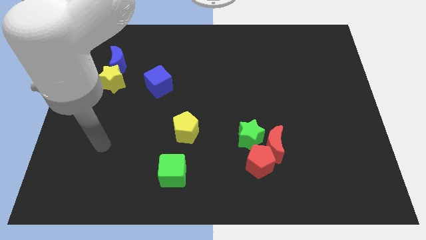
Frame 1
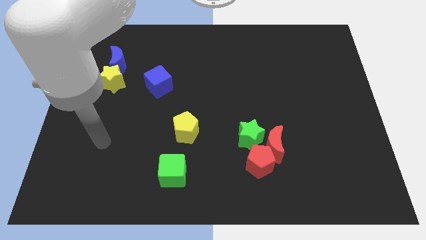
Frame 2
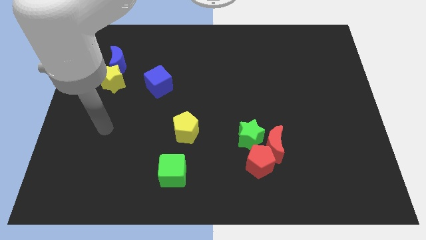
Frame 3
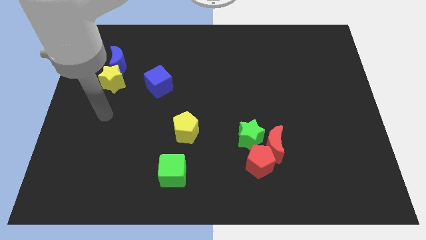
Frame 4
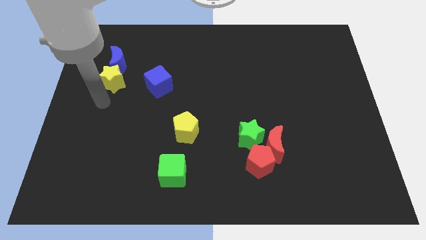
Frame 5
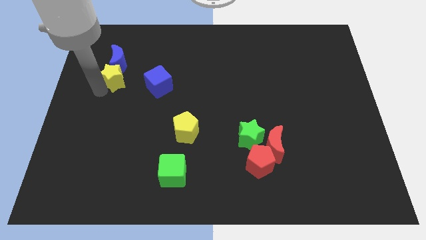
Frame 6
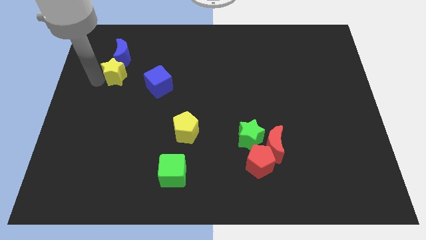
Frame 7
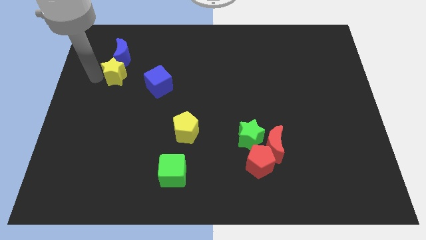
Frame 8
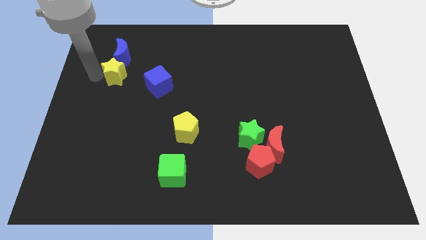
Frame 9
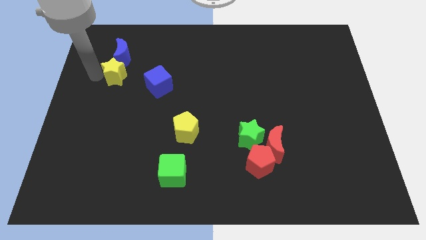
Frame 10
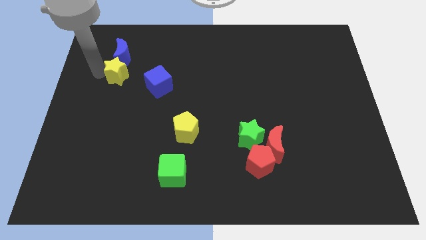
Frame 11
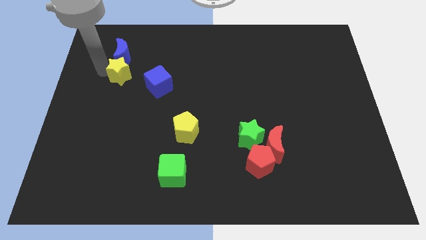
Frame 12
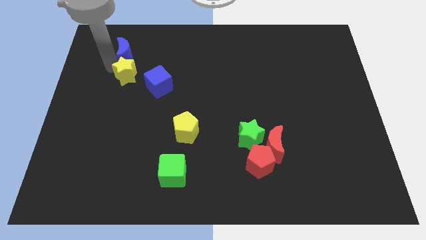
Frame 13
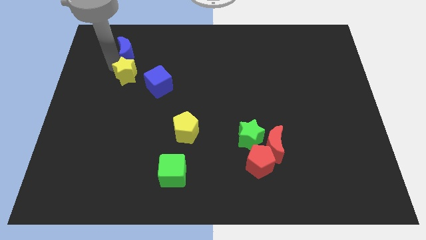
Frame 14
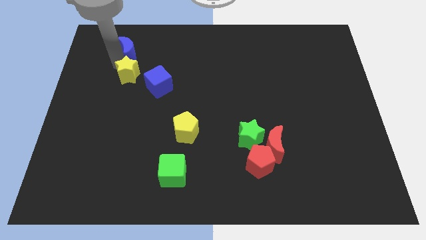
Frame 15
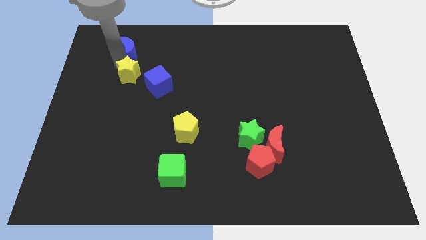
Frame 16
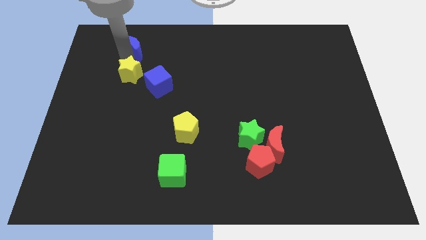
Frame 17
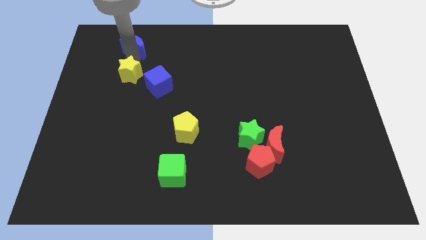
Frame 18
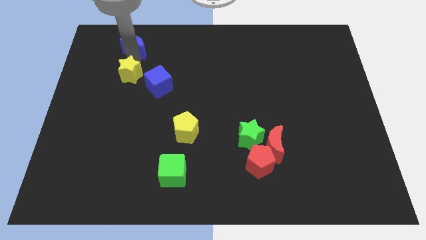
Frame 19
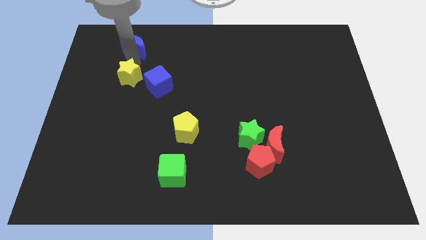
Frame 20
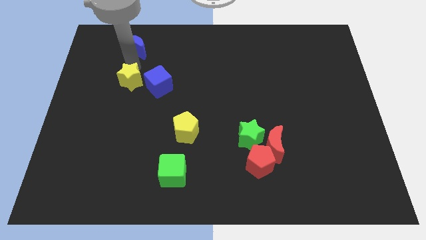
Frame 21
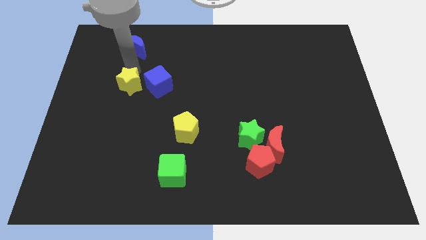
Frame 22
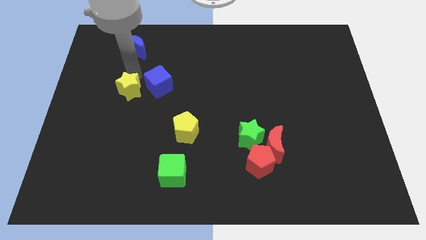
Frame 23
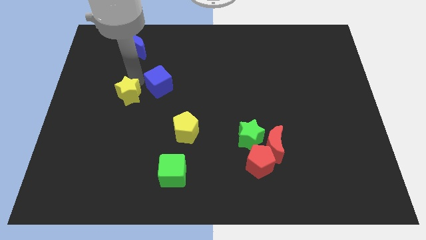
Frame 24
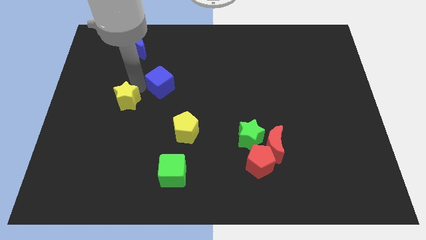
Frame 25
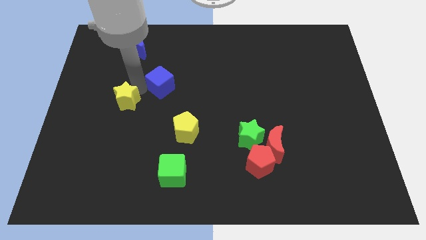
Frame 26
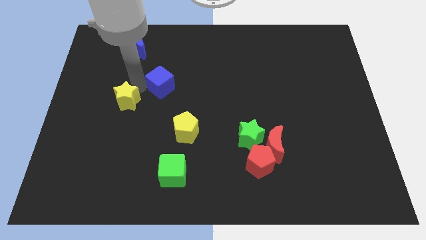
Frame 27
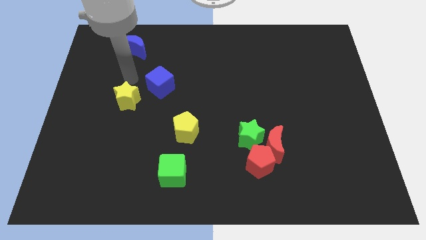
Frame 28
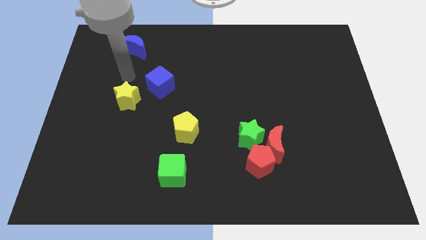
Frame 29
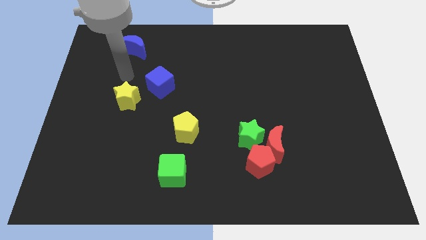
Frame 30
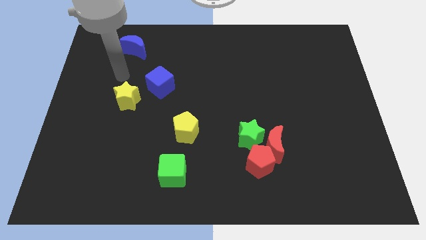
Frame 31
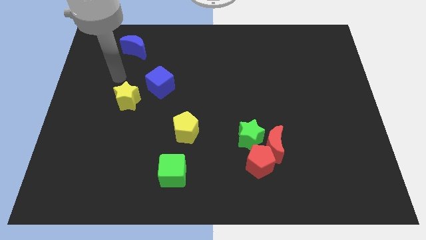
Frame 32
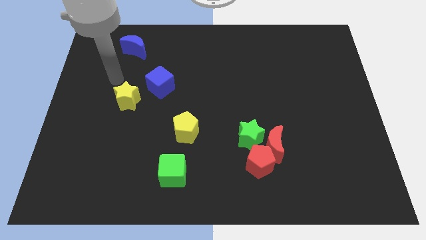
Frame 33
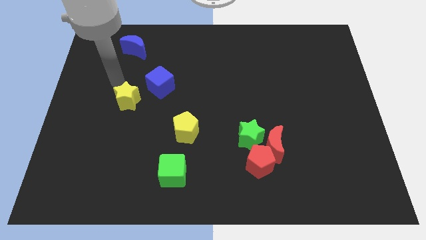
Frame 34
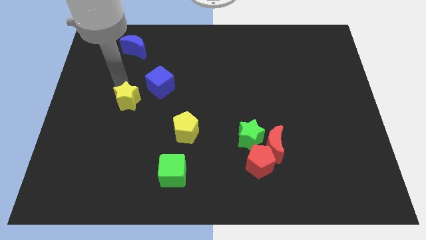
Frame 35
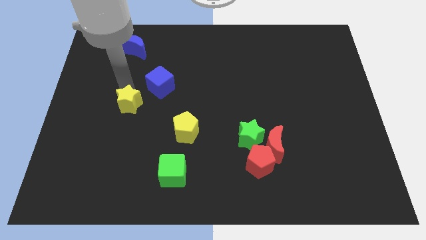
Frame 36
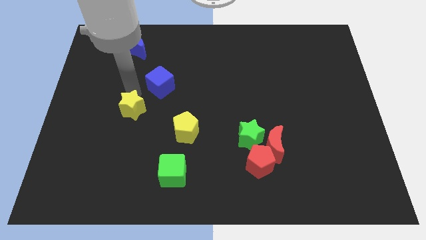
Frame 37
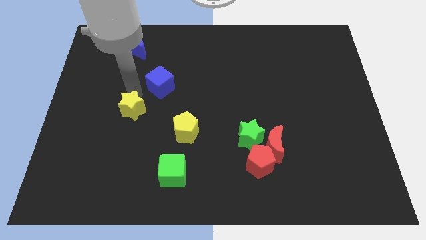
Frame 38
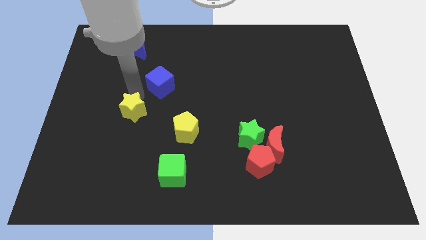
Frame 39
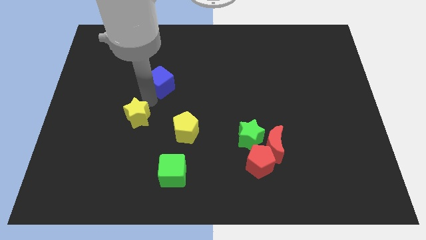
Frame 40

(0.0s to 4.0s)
push the yellow star into the blue crescent

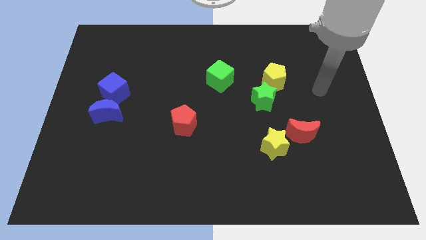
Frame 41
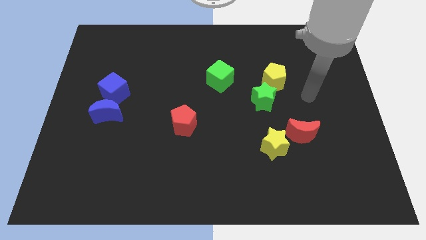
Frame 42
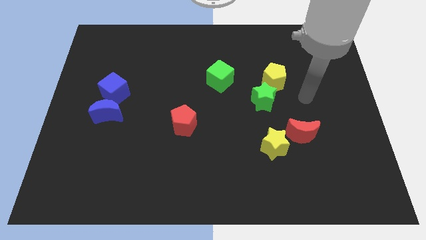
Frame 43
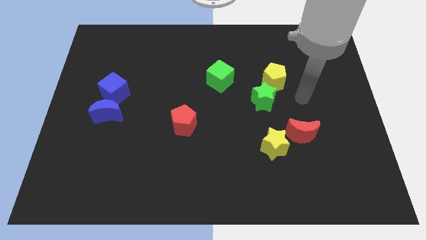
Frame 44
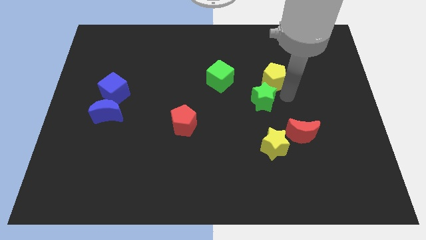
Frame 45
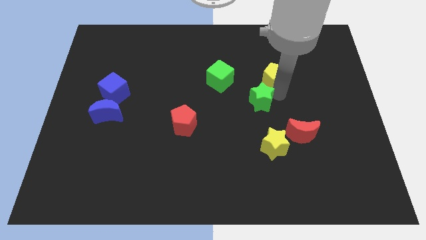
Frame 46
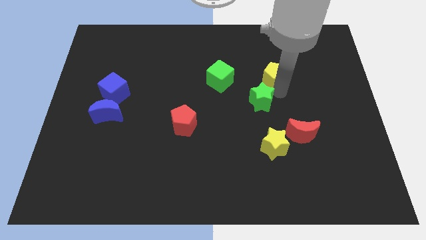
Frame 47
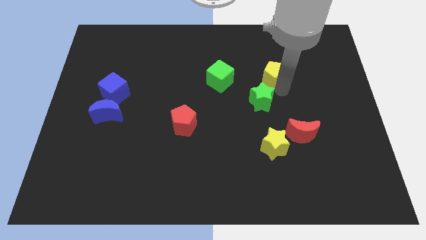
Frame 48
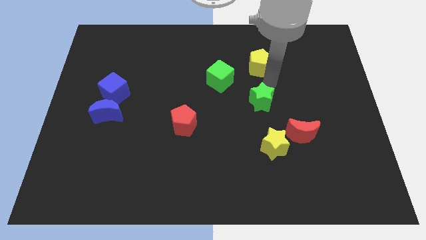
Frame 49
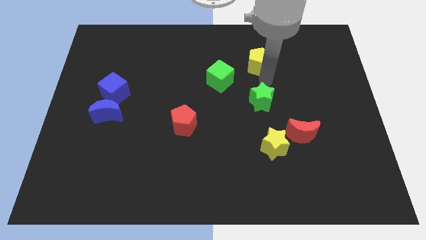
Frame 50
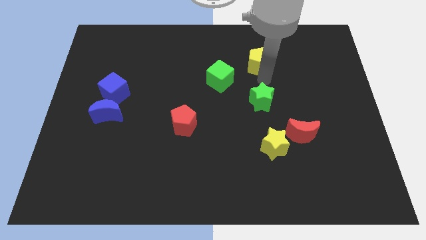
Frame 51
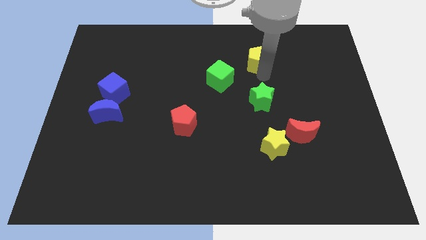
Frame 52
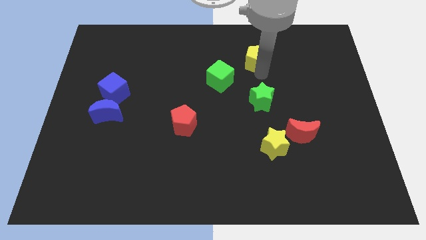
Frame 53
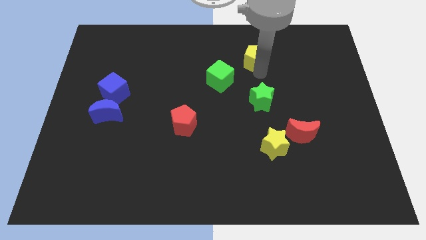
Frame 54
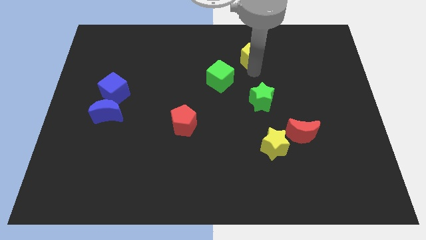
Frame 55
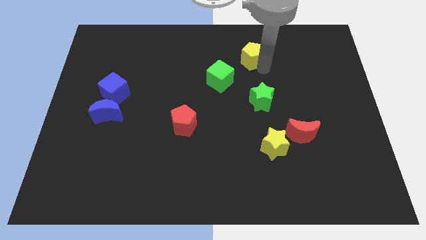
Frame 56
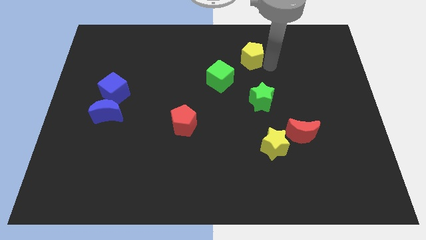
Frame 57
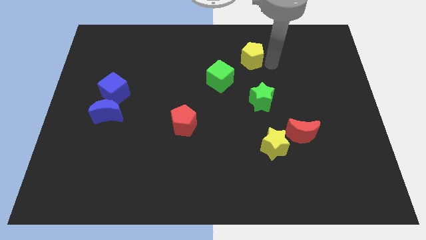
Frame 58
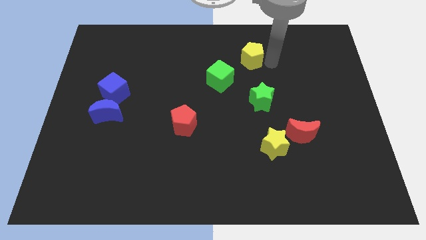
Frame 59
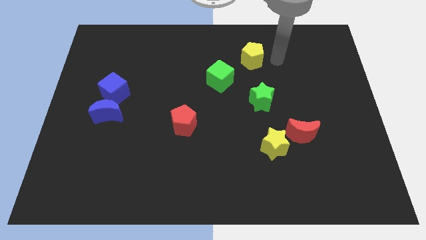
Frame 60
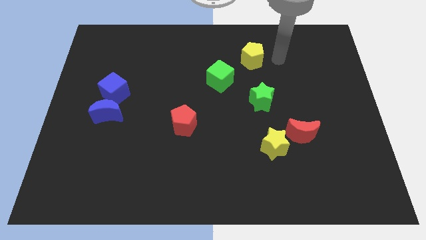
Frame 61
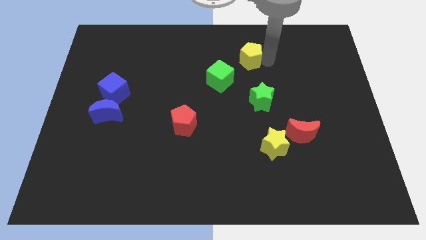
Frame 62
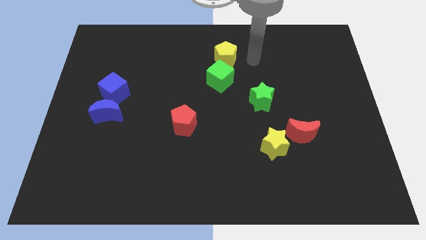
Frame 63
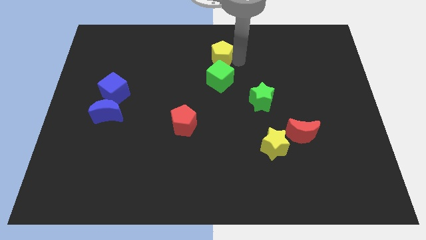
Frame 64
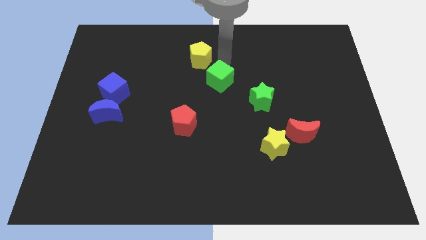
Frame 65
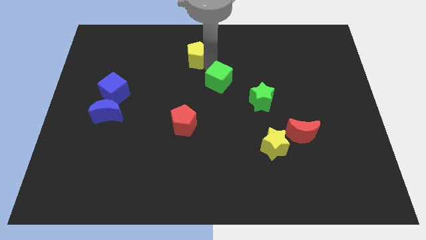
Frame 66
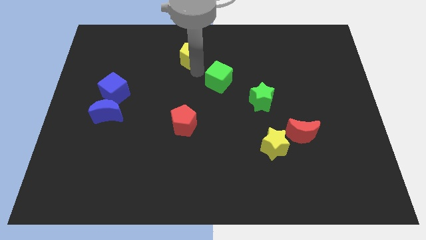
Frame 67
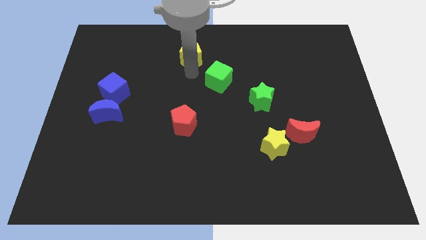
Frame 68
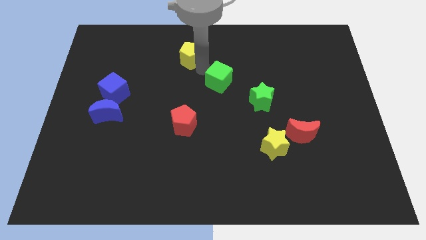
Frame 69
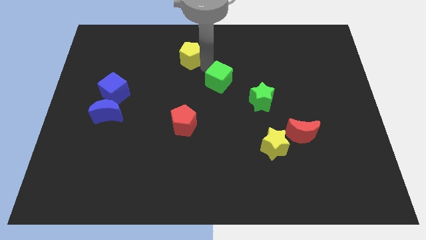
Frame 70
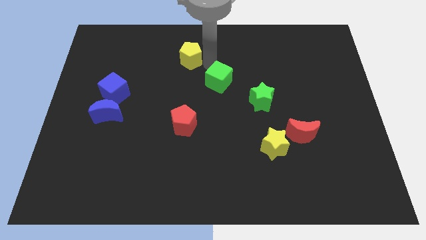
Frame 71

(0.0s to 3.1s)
separate yellow pentagon from green star

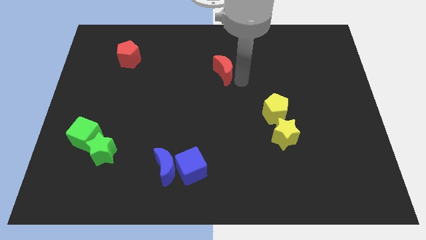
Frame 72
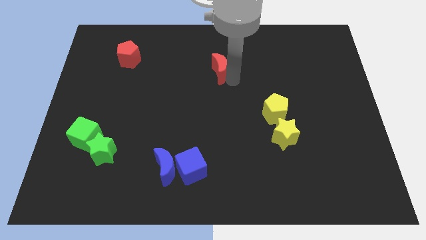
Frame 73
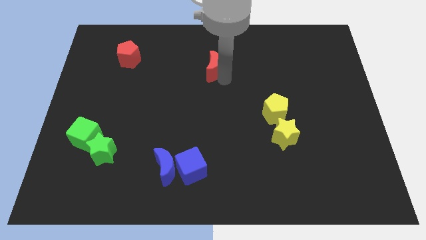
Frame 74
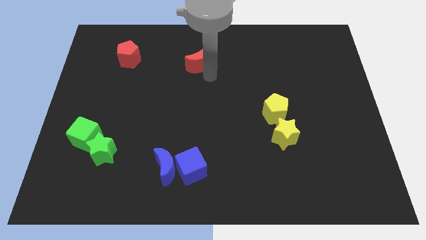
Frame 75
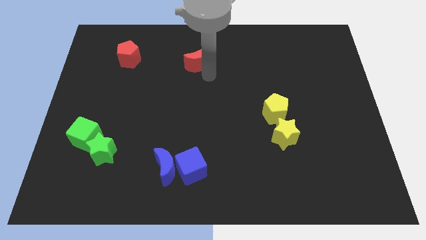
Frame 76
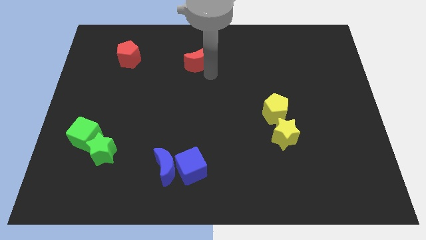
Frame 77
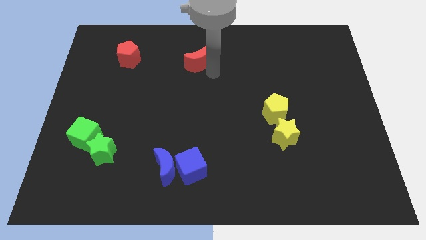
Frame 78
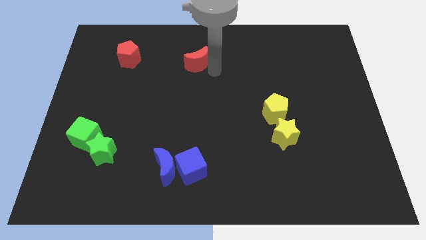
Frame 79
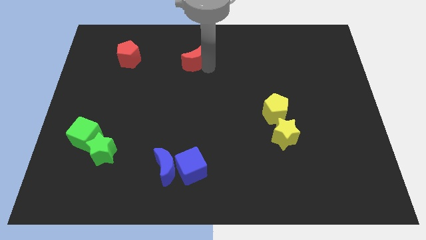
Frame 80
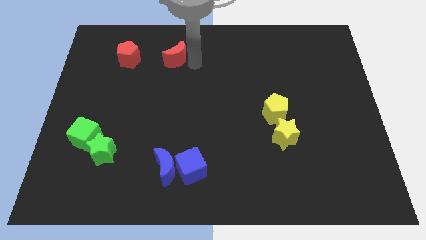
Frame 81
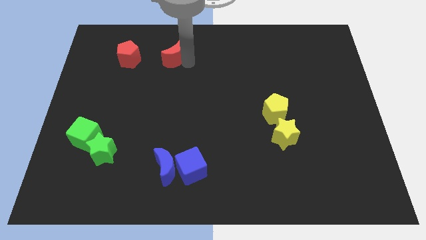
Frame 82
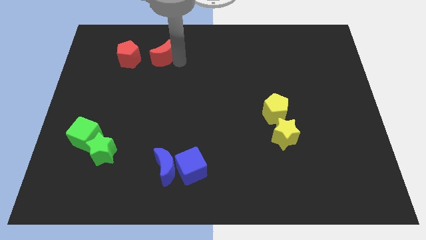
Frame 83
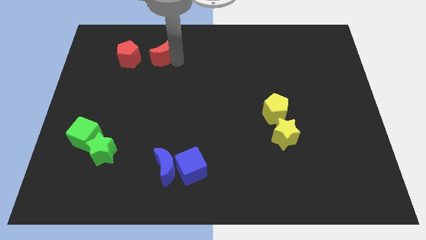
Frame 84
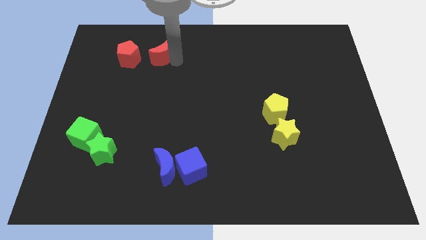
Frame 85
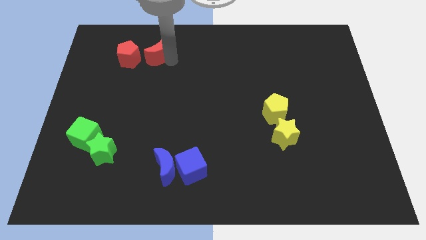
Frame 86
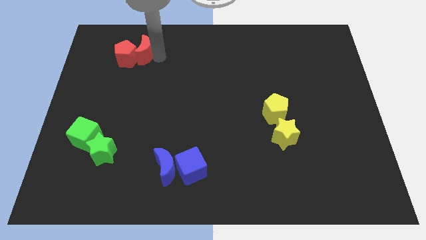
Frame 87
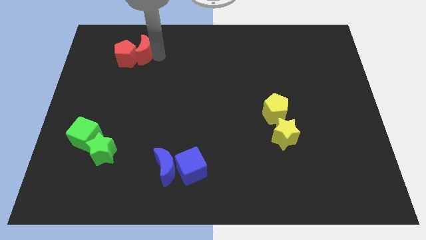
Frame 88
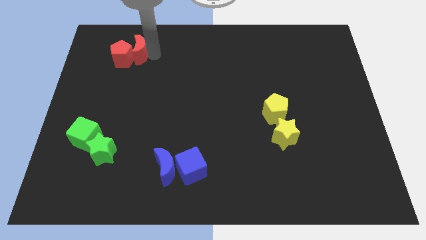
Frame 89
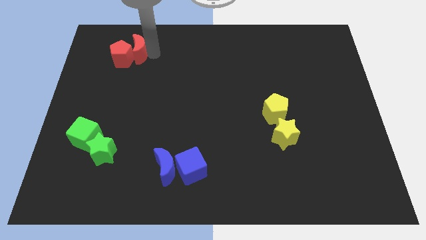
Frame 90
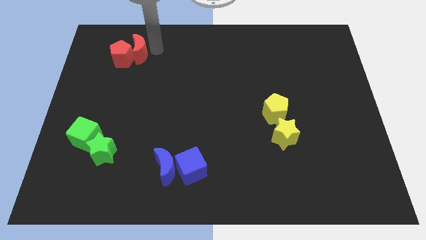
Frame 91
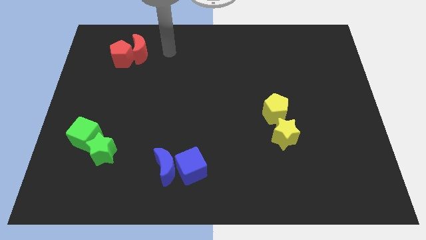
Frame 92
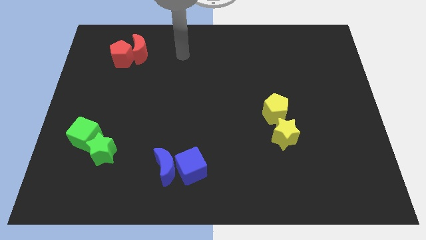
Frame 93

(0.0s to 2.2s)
push red moon into red pentagon
